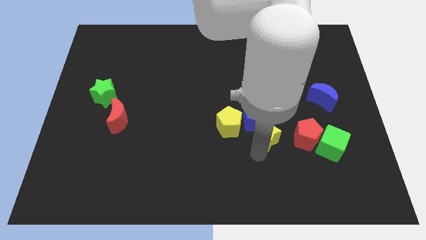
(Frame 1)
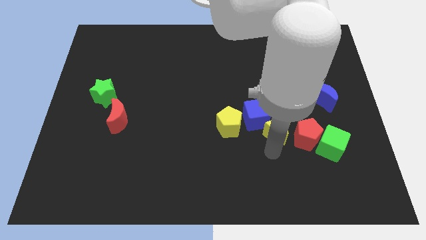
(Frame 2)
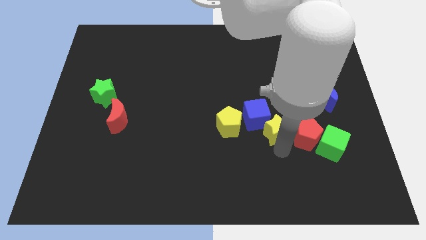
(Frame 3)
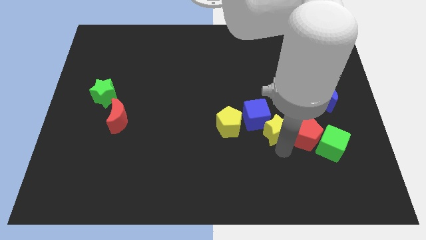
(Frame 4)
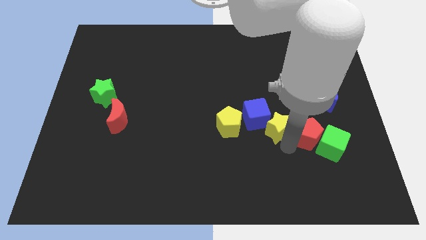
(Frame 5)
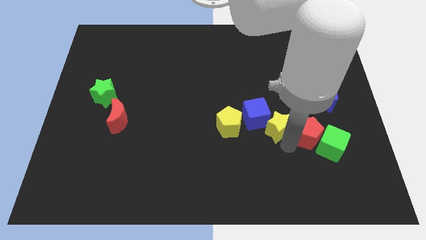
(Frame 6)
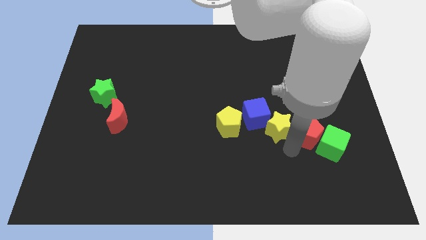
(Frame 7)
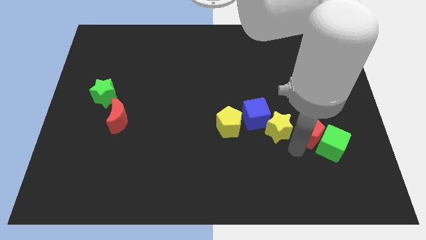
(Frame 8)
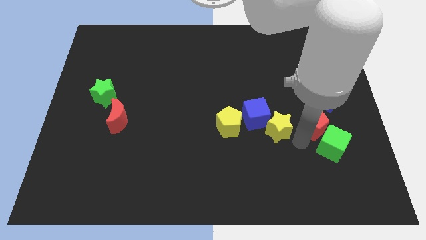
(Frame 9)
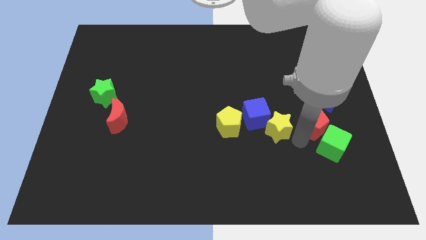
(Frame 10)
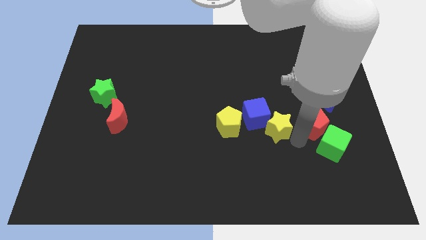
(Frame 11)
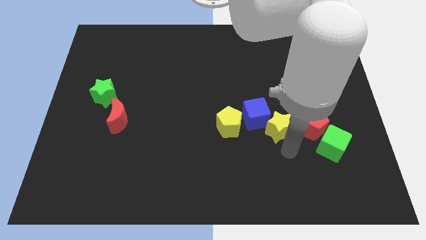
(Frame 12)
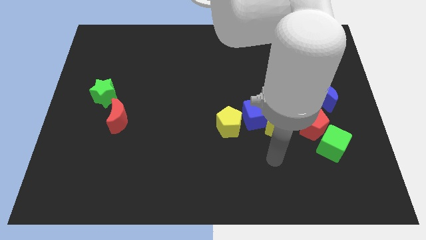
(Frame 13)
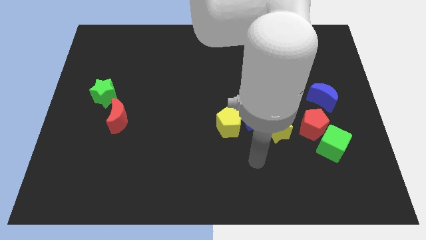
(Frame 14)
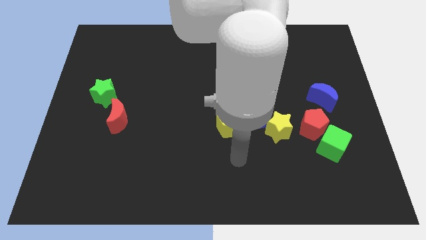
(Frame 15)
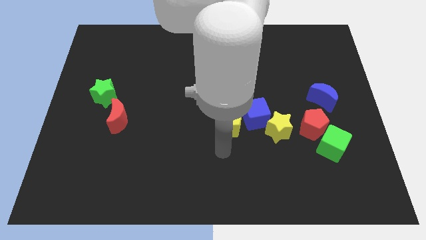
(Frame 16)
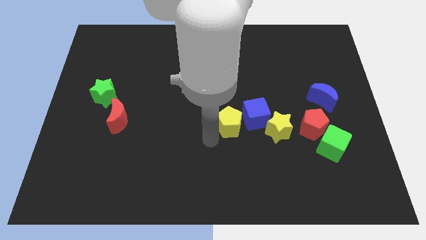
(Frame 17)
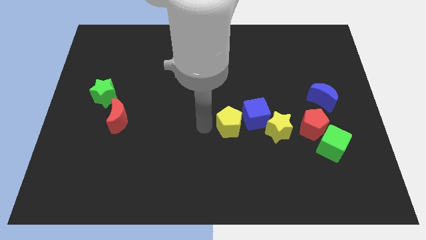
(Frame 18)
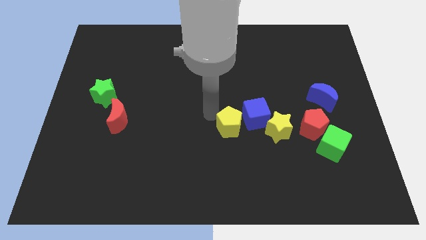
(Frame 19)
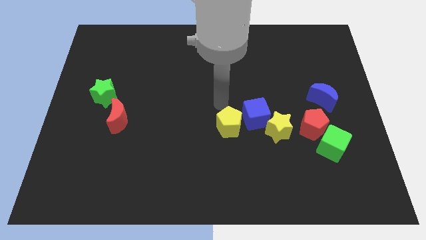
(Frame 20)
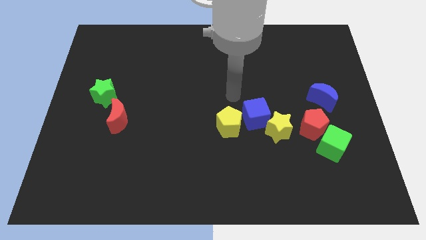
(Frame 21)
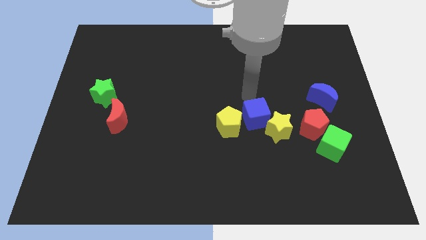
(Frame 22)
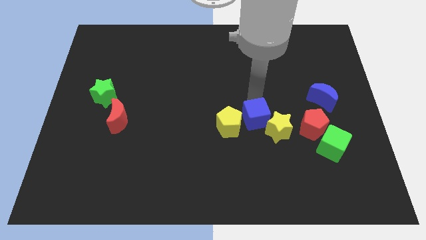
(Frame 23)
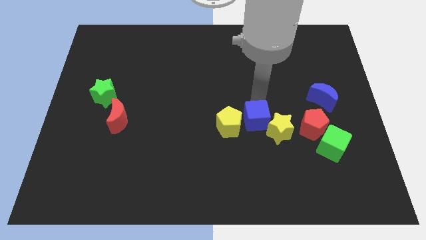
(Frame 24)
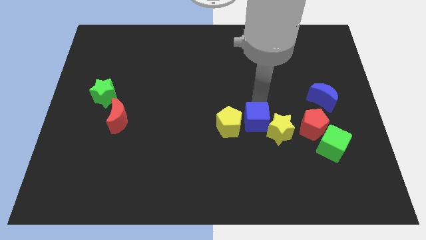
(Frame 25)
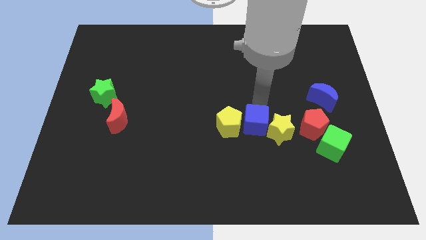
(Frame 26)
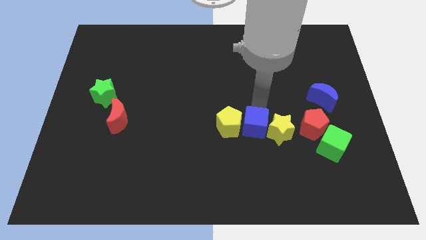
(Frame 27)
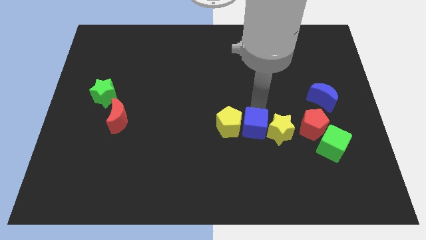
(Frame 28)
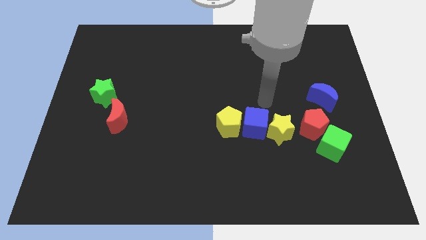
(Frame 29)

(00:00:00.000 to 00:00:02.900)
place blue cube in between yellow pentagon and yellow star

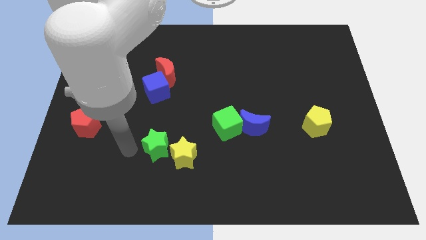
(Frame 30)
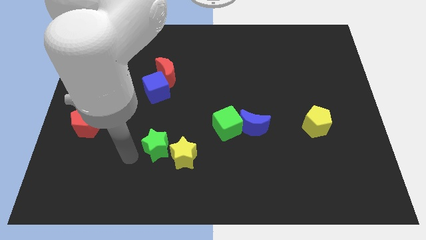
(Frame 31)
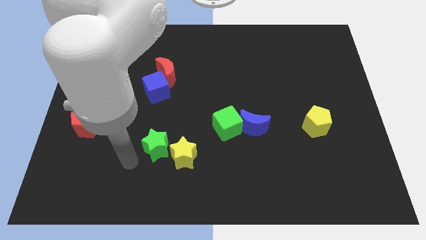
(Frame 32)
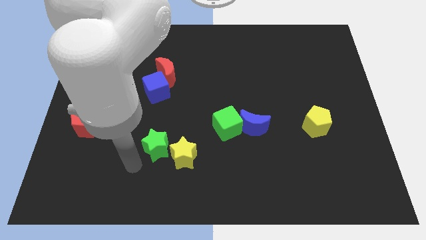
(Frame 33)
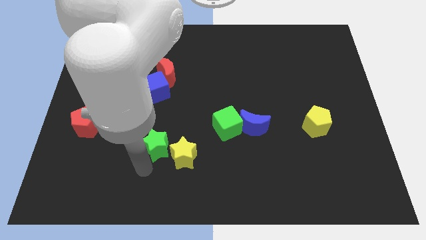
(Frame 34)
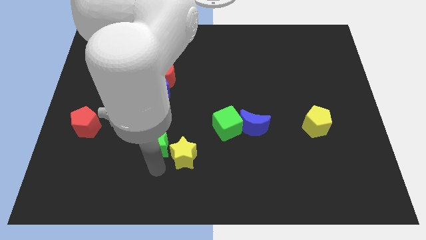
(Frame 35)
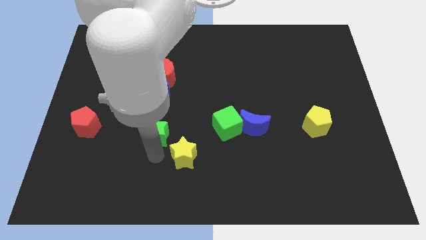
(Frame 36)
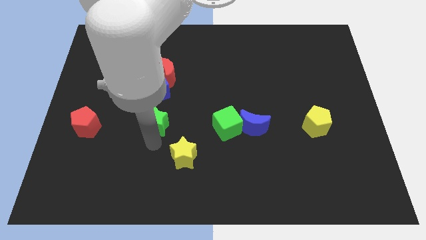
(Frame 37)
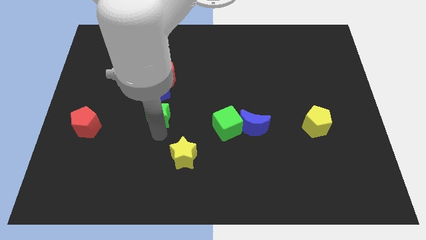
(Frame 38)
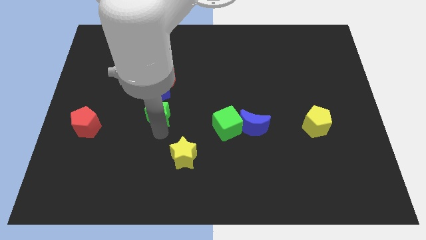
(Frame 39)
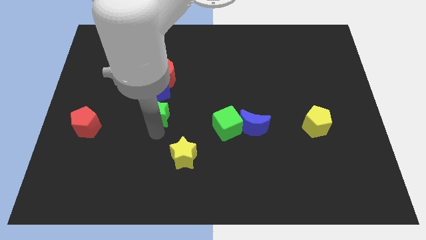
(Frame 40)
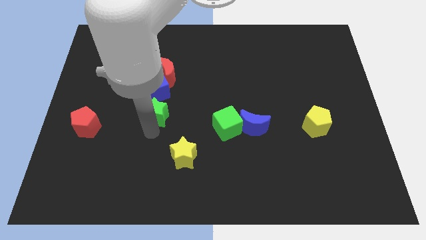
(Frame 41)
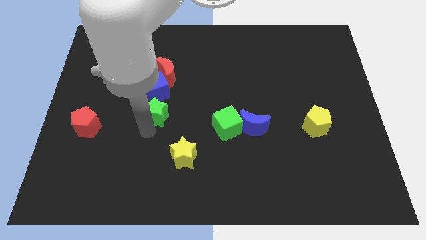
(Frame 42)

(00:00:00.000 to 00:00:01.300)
push green star into blue cube

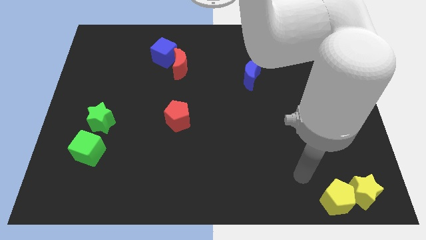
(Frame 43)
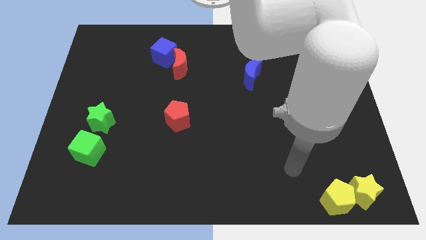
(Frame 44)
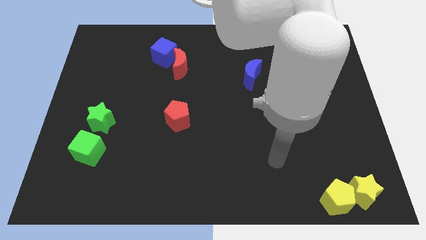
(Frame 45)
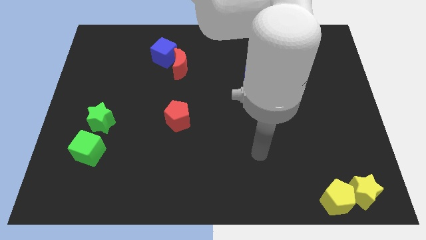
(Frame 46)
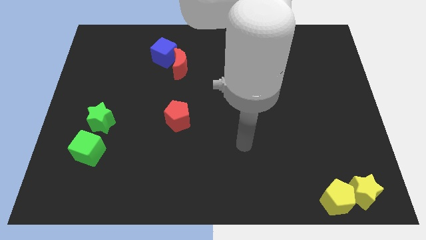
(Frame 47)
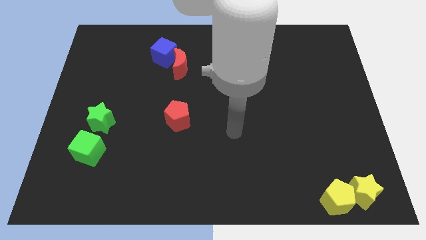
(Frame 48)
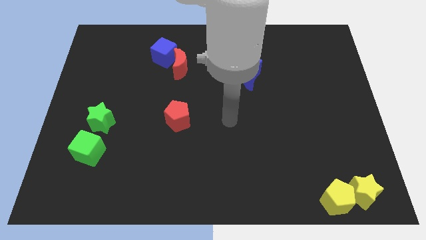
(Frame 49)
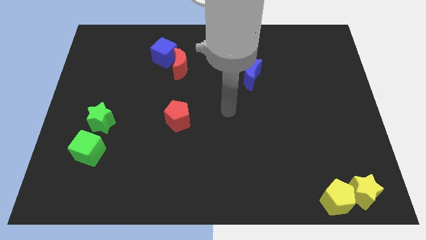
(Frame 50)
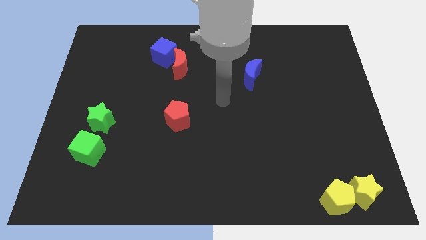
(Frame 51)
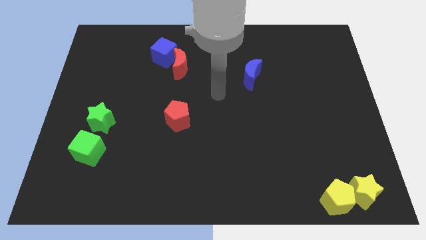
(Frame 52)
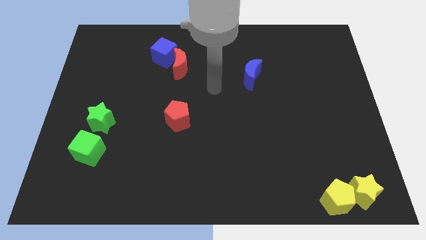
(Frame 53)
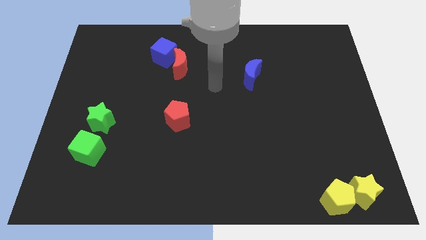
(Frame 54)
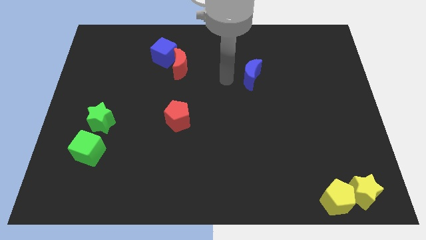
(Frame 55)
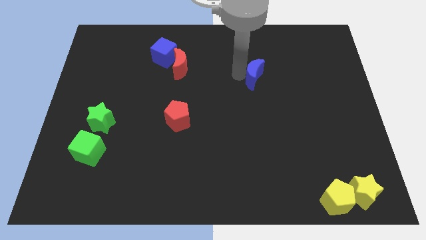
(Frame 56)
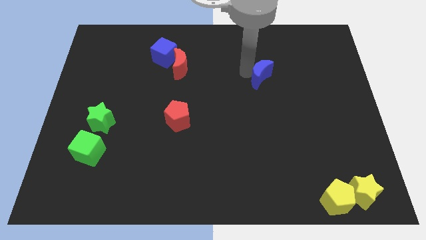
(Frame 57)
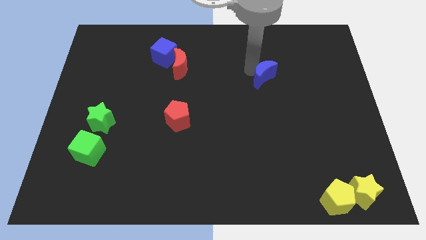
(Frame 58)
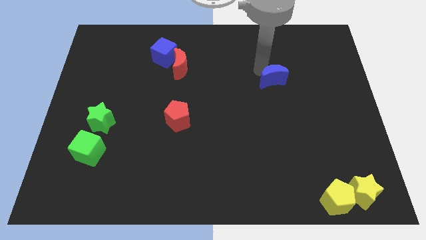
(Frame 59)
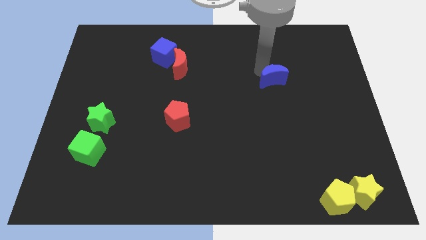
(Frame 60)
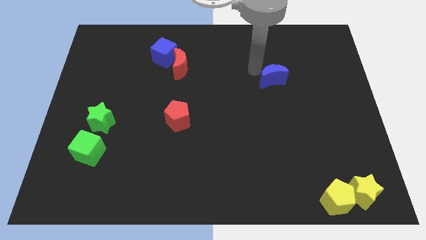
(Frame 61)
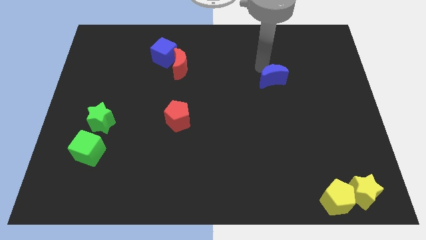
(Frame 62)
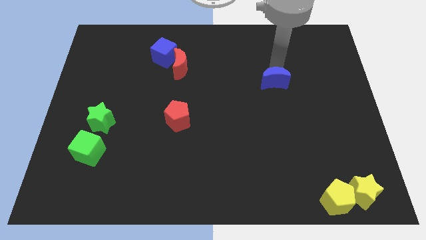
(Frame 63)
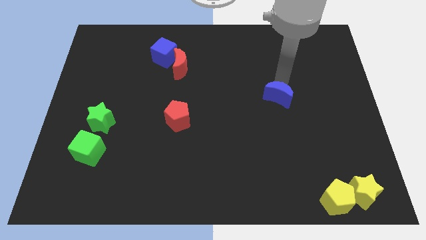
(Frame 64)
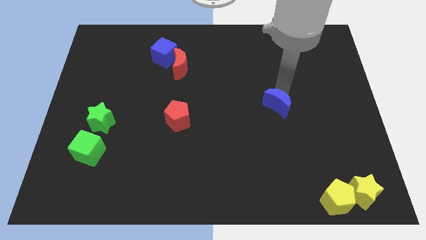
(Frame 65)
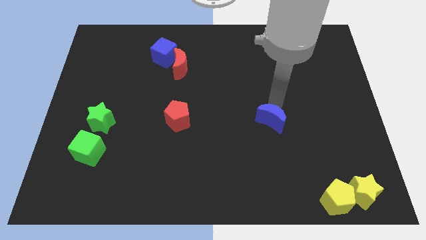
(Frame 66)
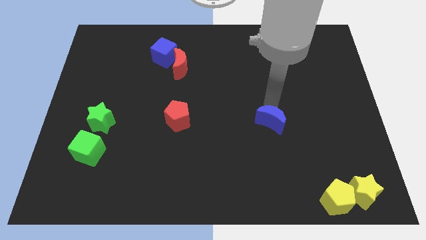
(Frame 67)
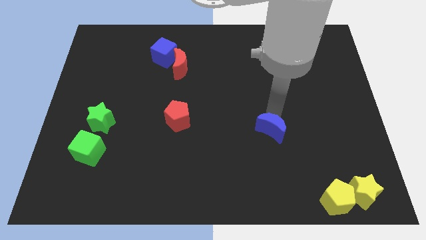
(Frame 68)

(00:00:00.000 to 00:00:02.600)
place the blue crescent to the right of the red pentagon

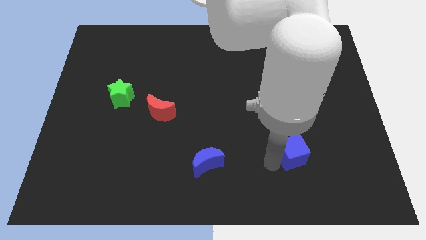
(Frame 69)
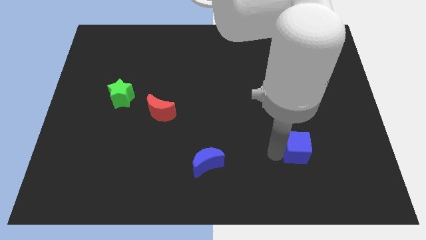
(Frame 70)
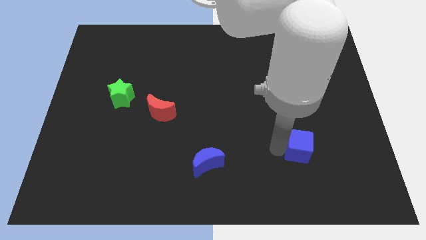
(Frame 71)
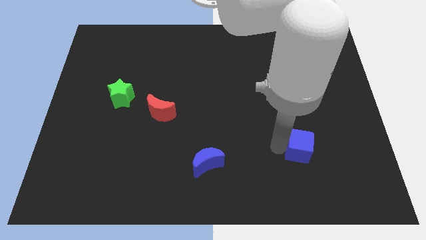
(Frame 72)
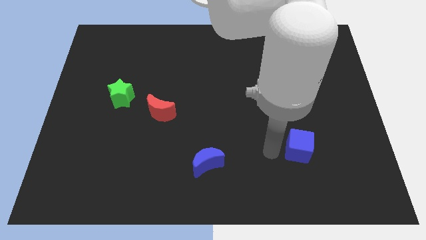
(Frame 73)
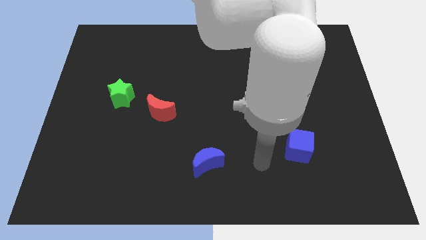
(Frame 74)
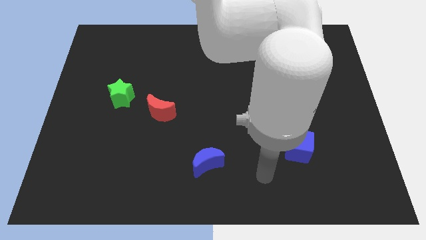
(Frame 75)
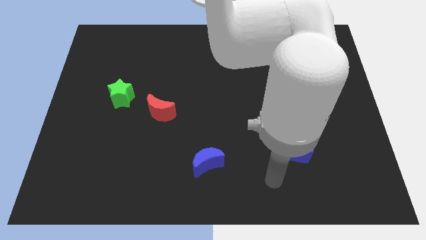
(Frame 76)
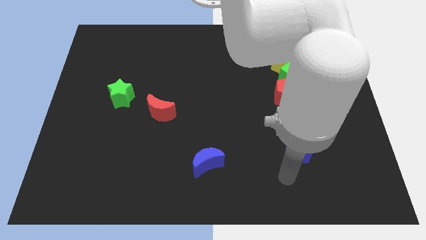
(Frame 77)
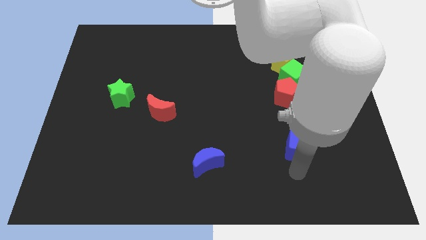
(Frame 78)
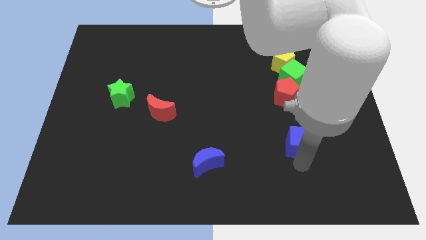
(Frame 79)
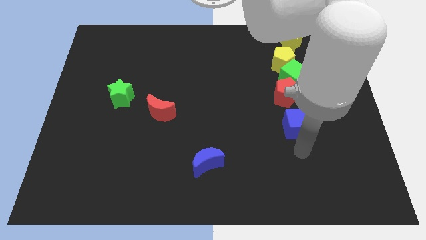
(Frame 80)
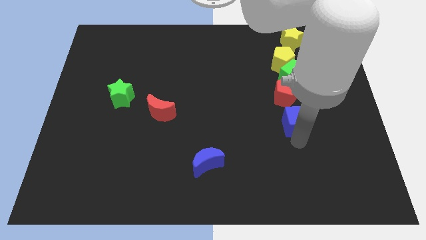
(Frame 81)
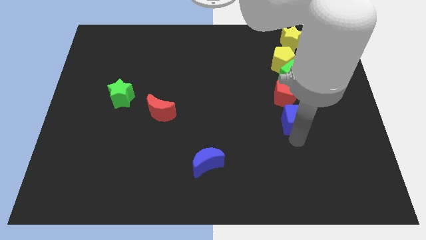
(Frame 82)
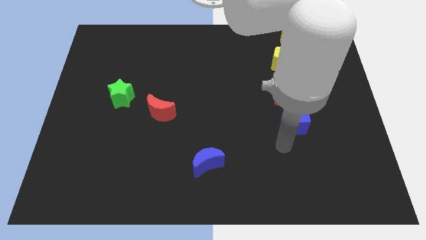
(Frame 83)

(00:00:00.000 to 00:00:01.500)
place blue cube below red pentagon

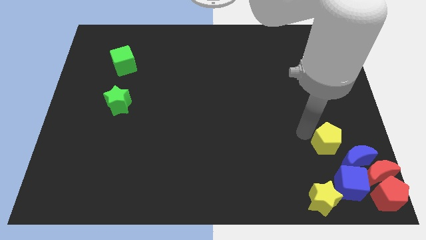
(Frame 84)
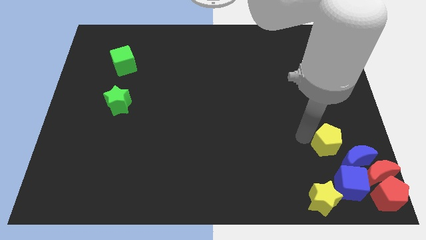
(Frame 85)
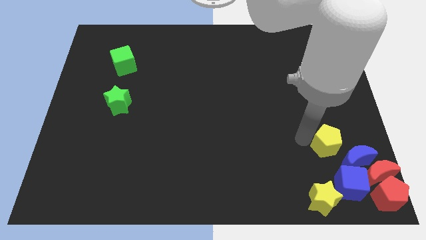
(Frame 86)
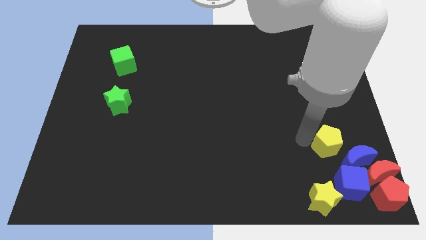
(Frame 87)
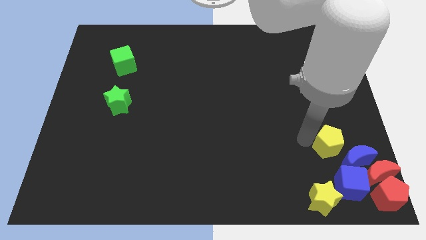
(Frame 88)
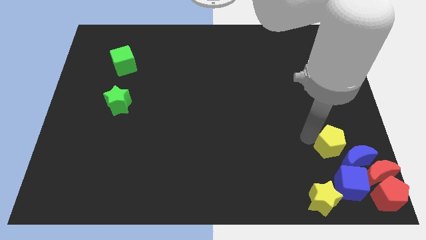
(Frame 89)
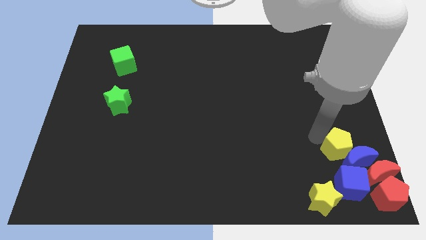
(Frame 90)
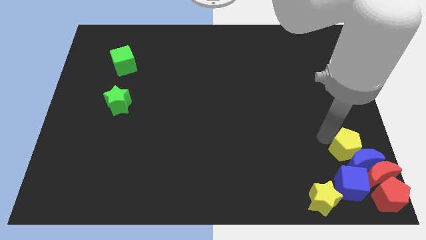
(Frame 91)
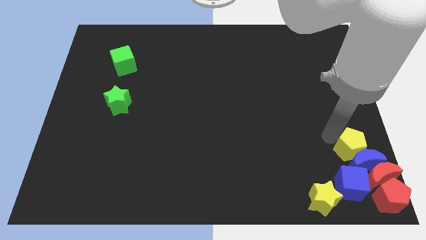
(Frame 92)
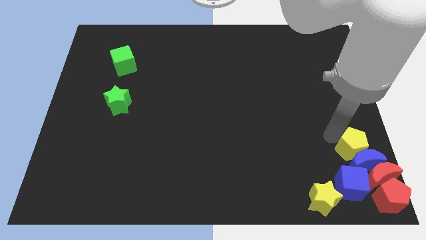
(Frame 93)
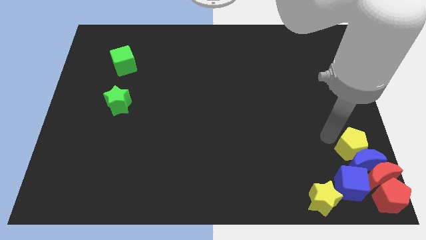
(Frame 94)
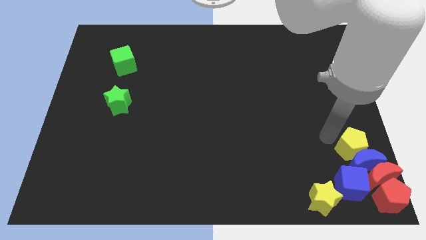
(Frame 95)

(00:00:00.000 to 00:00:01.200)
place the yellow pentagon above the blue crescent
